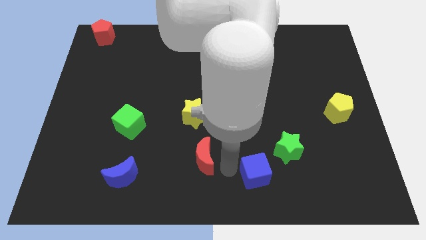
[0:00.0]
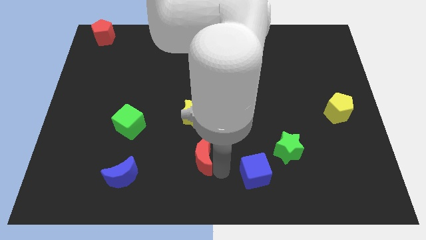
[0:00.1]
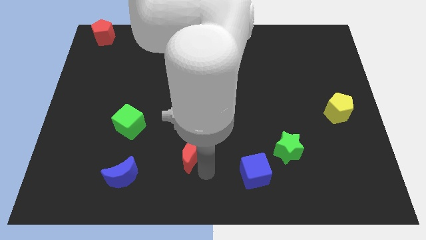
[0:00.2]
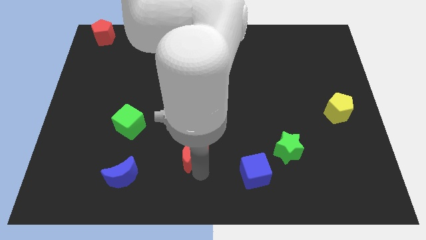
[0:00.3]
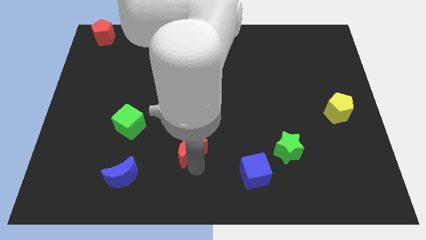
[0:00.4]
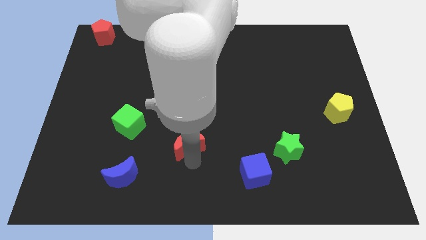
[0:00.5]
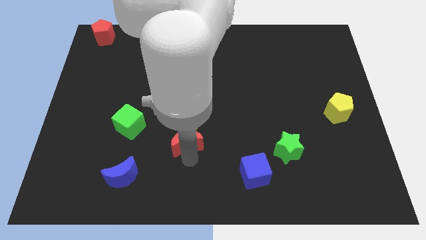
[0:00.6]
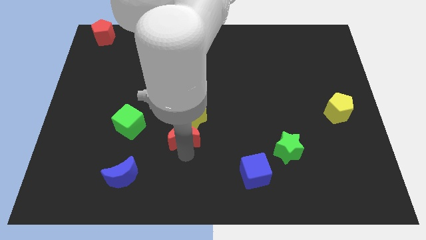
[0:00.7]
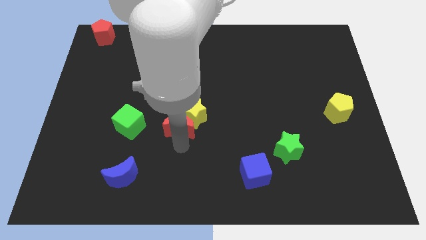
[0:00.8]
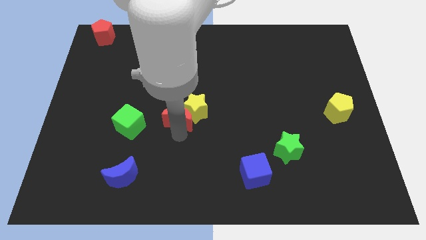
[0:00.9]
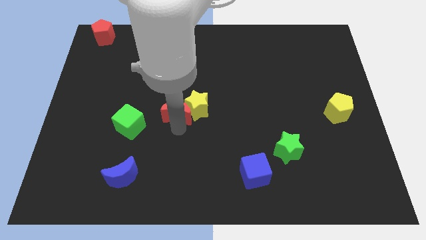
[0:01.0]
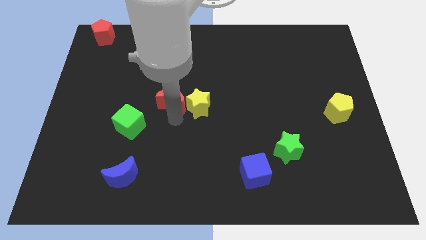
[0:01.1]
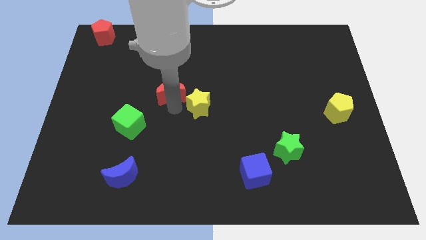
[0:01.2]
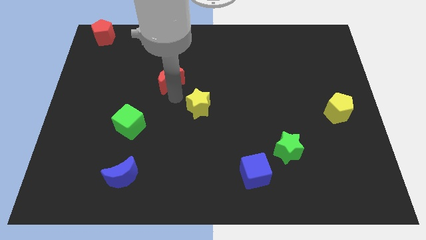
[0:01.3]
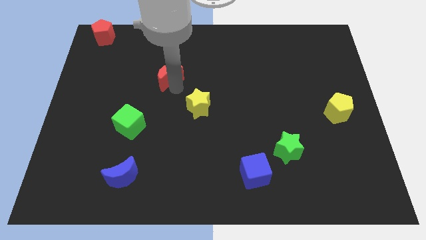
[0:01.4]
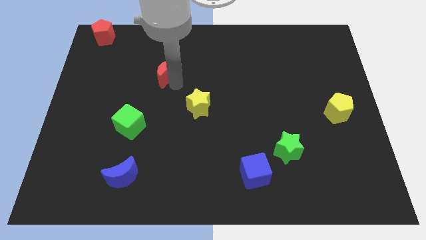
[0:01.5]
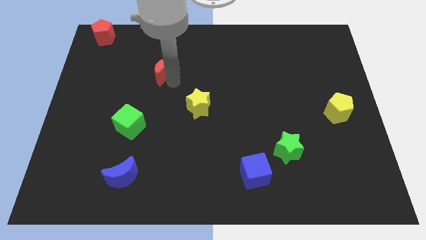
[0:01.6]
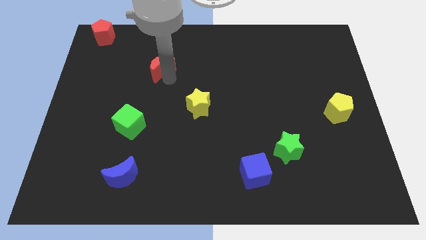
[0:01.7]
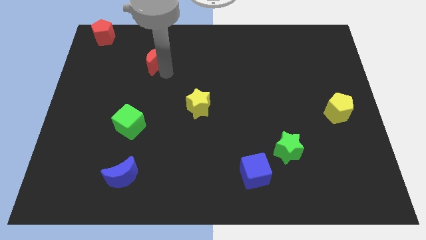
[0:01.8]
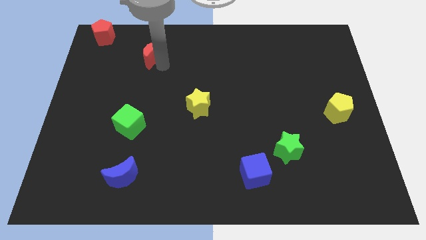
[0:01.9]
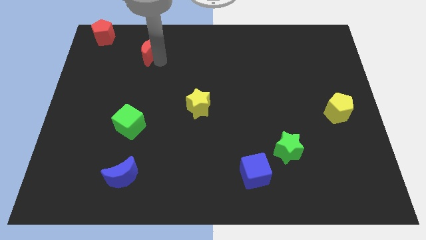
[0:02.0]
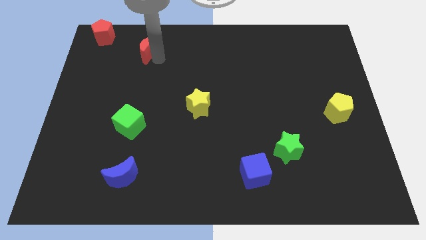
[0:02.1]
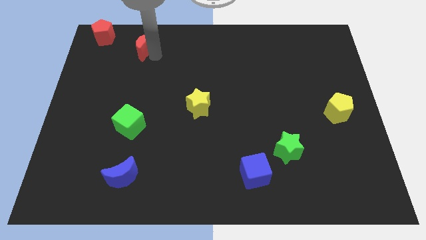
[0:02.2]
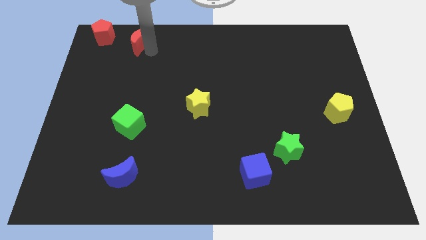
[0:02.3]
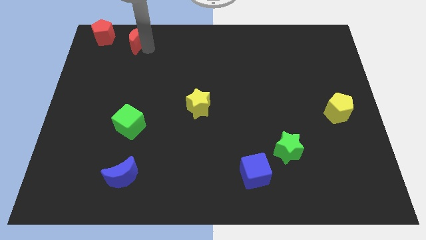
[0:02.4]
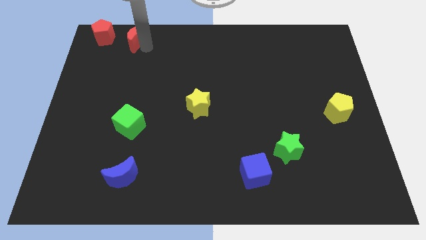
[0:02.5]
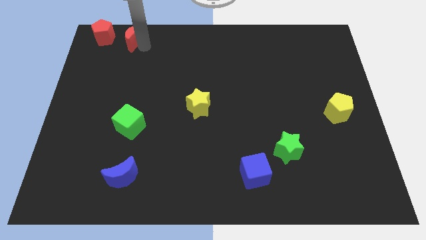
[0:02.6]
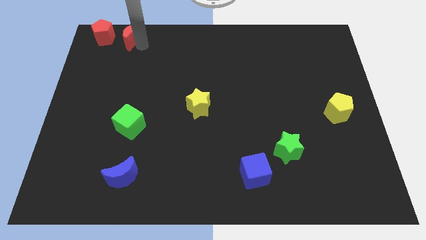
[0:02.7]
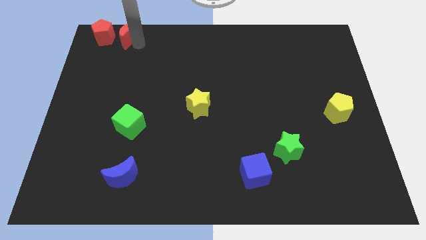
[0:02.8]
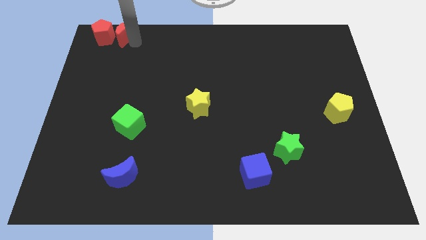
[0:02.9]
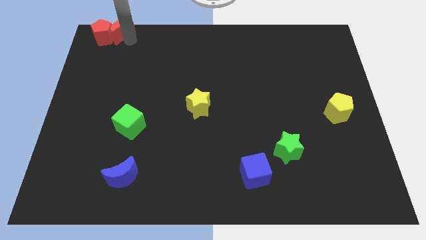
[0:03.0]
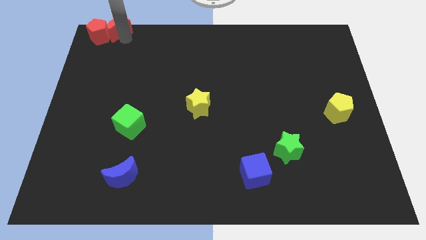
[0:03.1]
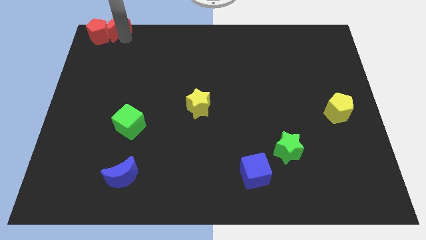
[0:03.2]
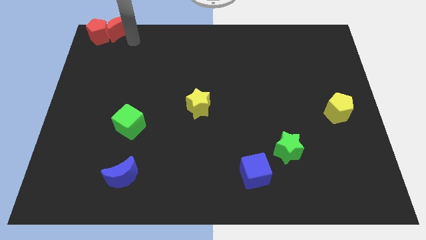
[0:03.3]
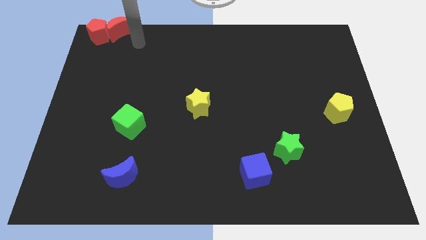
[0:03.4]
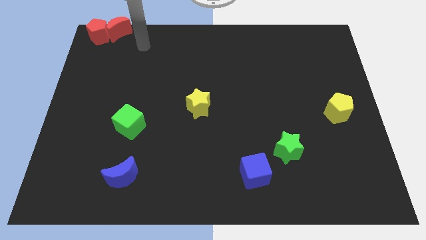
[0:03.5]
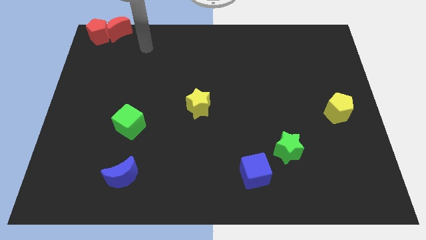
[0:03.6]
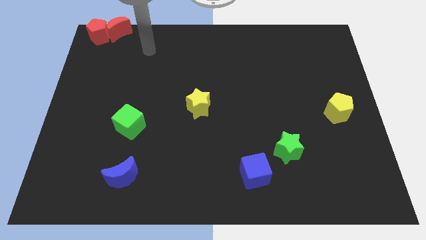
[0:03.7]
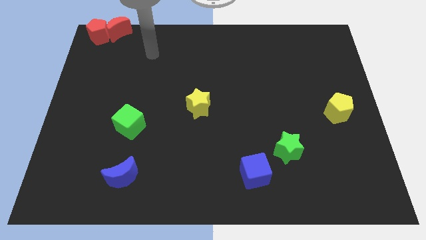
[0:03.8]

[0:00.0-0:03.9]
push the red moon into red pentagon

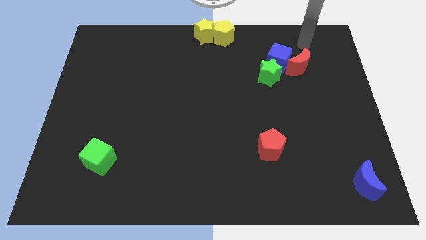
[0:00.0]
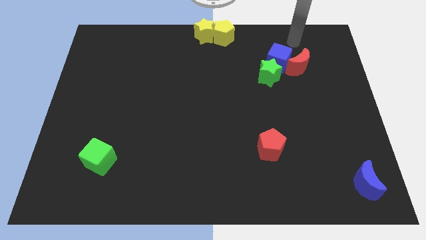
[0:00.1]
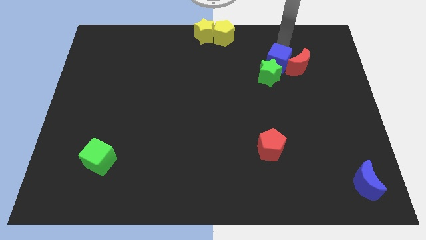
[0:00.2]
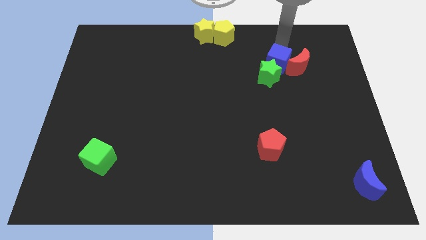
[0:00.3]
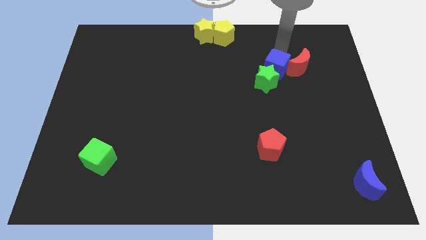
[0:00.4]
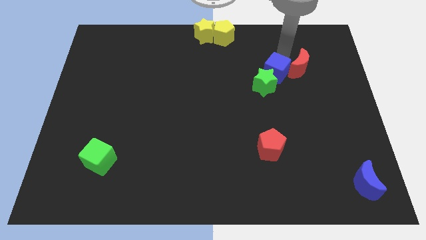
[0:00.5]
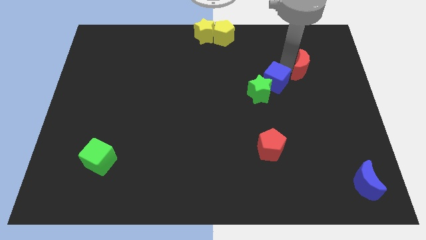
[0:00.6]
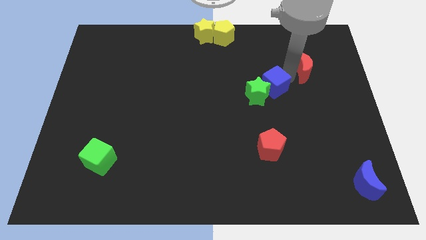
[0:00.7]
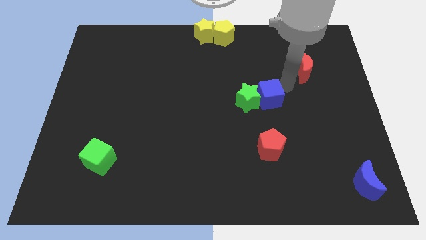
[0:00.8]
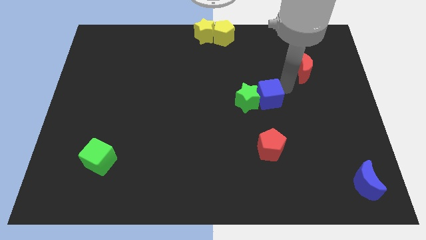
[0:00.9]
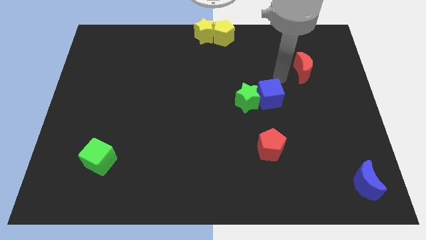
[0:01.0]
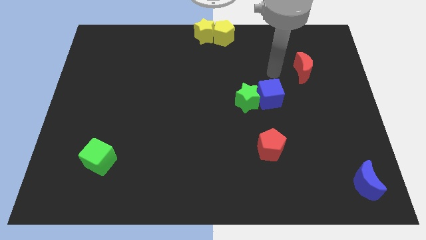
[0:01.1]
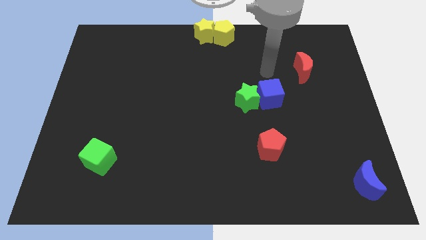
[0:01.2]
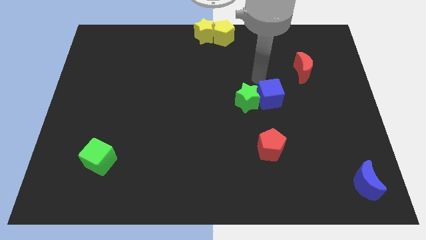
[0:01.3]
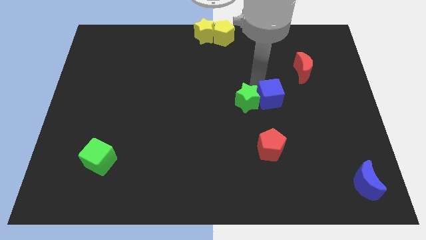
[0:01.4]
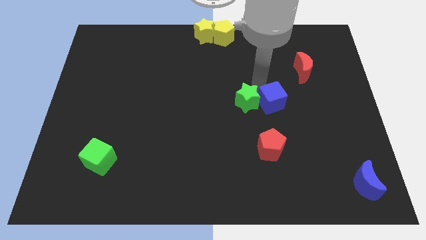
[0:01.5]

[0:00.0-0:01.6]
put the blue cube vertically above the red pentagon

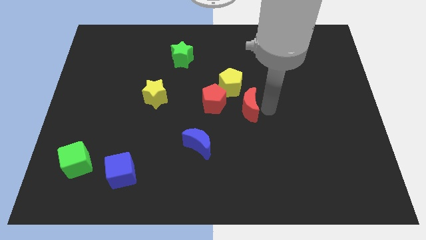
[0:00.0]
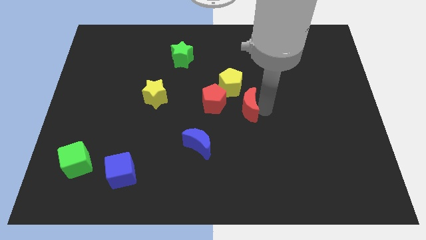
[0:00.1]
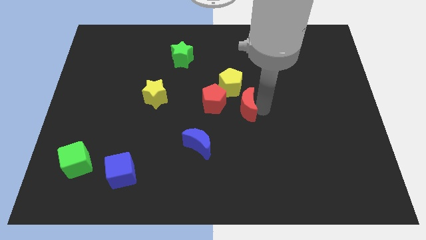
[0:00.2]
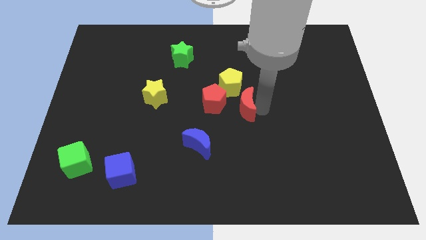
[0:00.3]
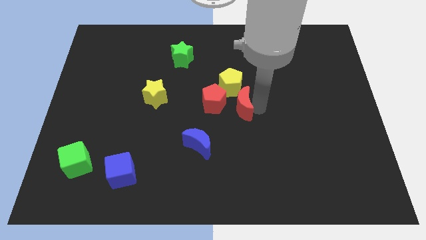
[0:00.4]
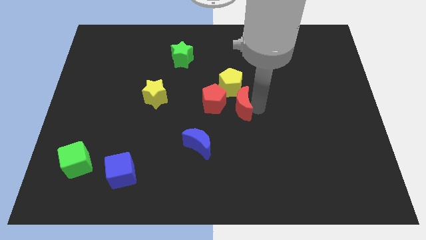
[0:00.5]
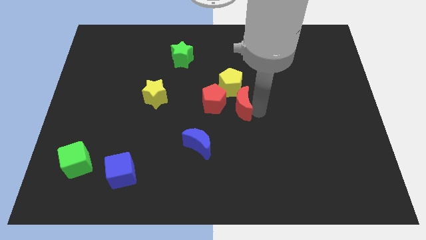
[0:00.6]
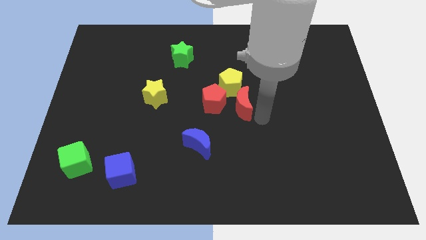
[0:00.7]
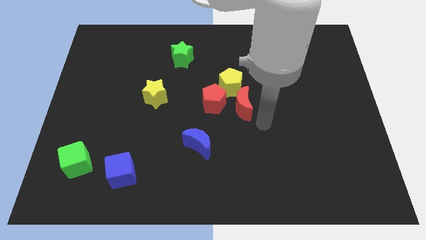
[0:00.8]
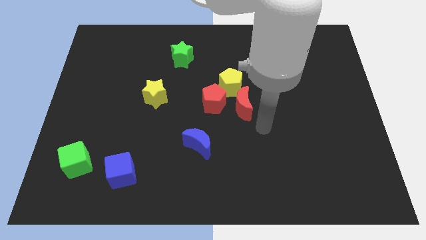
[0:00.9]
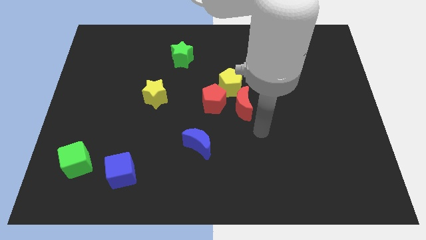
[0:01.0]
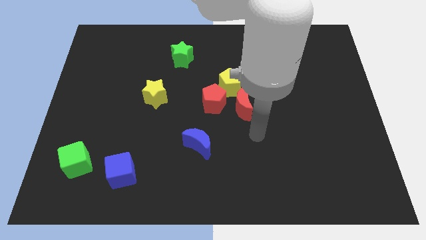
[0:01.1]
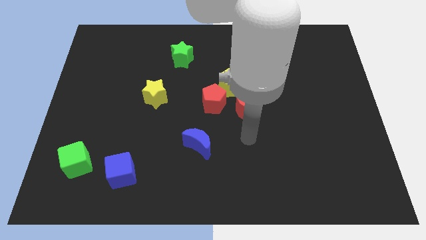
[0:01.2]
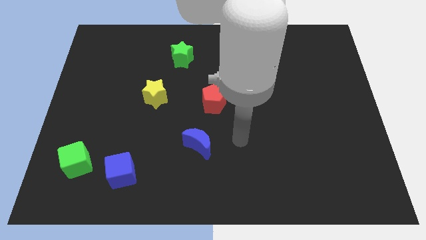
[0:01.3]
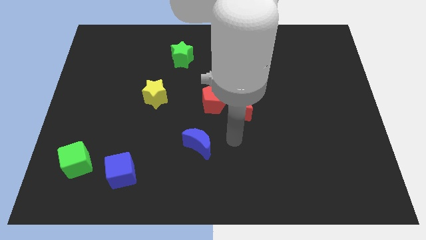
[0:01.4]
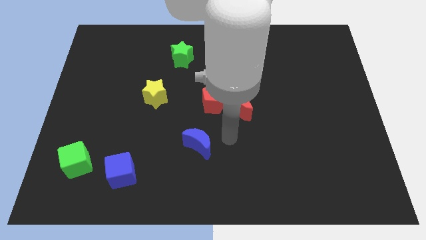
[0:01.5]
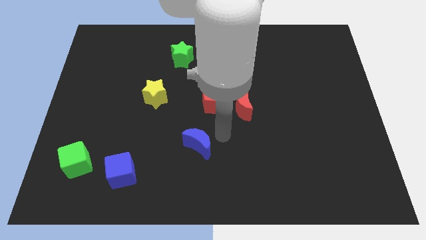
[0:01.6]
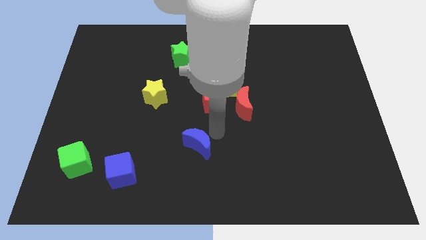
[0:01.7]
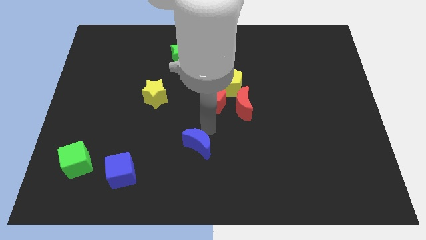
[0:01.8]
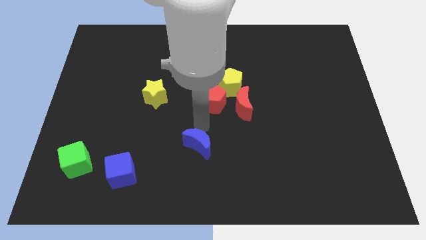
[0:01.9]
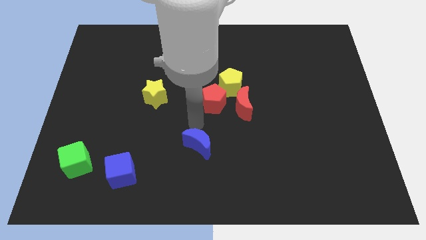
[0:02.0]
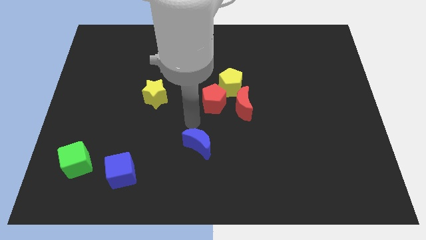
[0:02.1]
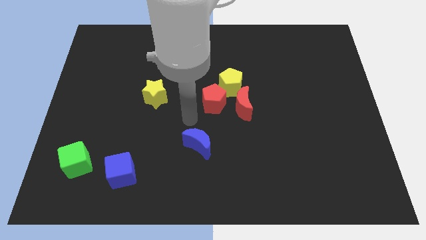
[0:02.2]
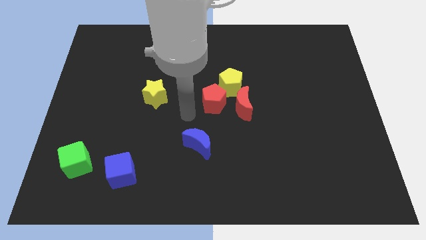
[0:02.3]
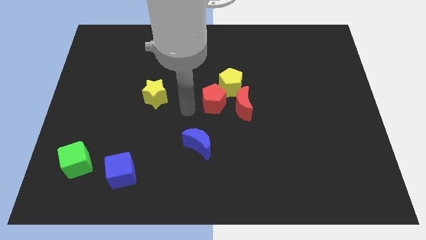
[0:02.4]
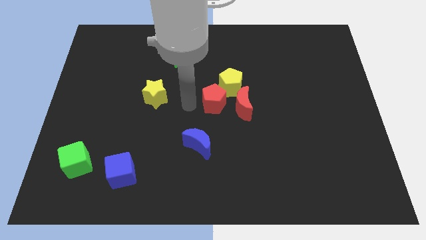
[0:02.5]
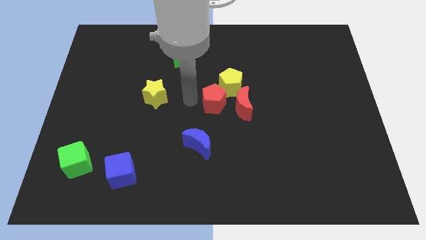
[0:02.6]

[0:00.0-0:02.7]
move your arm left to the red pentagon

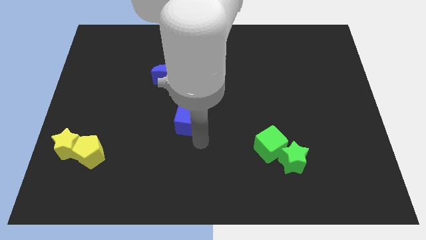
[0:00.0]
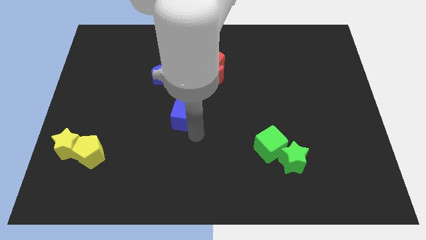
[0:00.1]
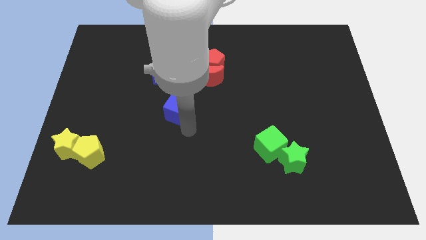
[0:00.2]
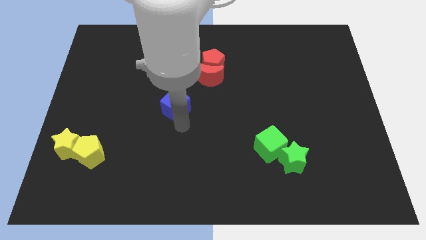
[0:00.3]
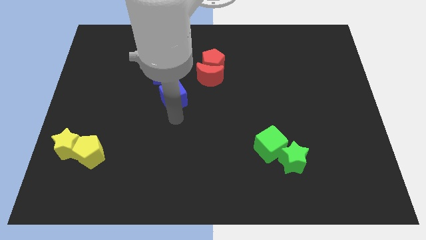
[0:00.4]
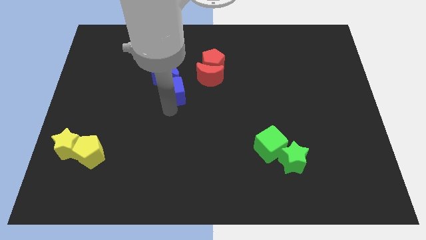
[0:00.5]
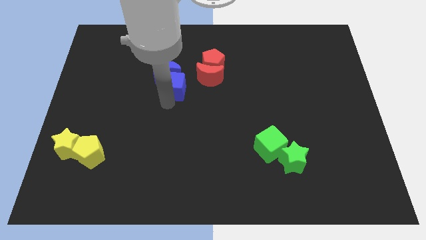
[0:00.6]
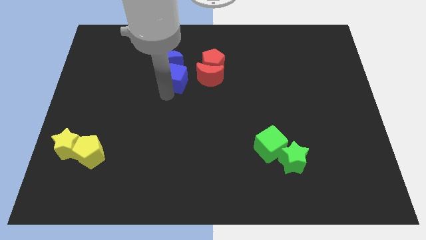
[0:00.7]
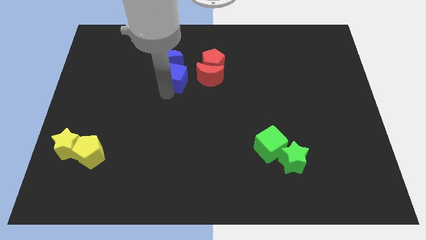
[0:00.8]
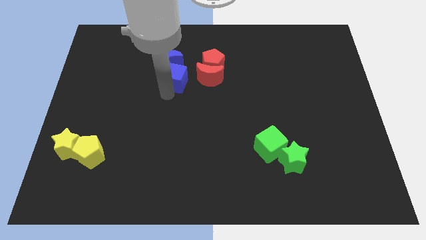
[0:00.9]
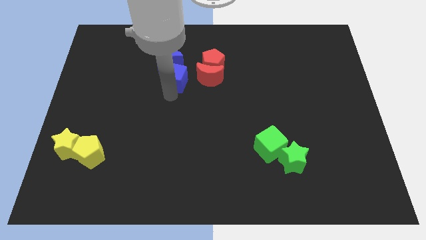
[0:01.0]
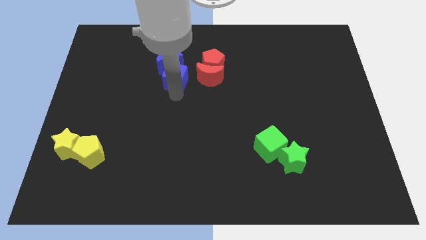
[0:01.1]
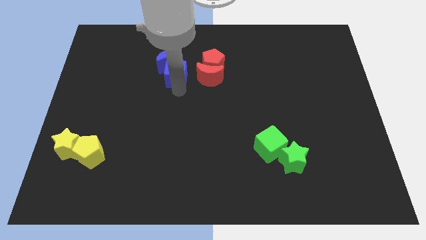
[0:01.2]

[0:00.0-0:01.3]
push the blue cube into the bottom side of the blue crescent
